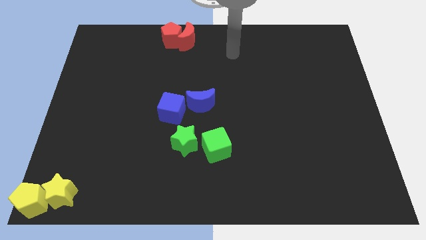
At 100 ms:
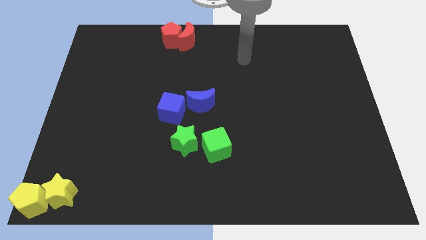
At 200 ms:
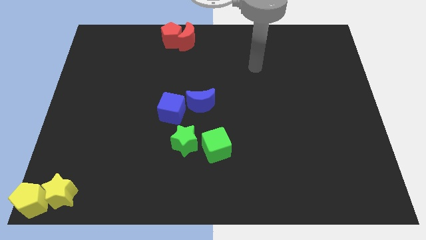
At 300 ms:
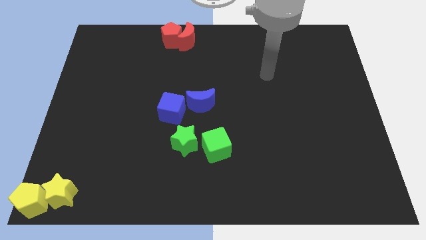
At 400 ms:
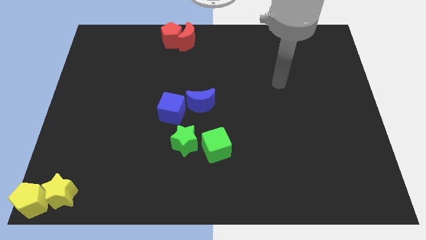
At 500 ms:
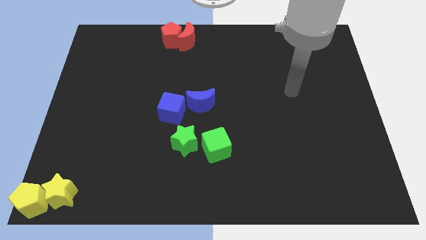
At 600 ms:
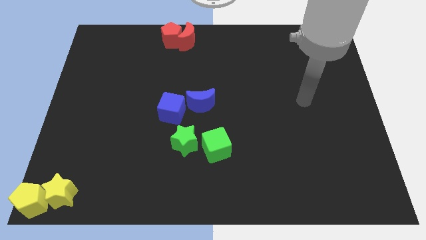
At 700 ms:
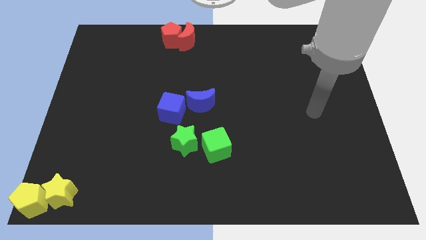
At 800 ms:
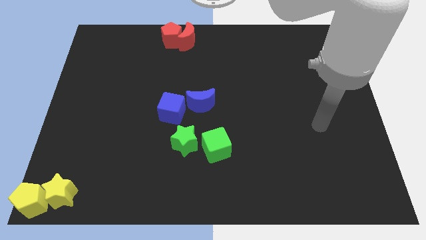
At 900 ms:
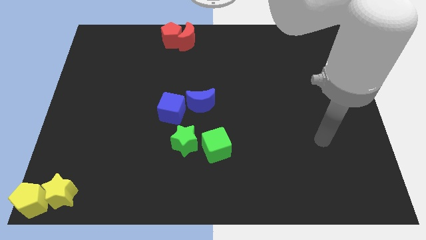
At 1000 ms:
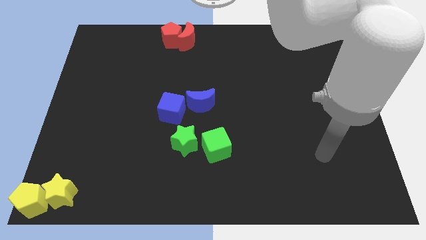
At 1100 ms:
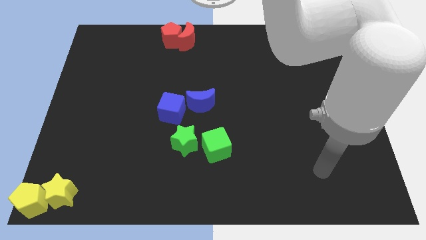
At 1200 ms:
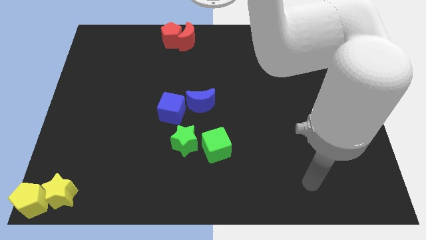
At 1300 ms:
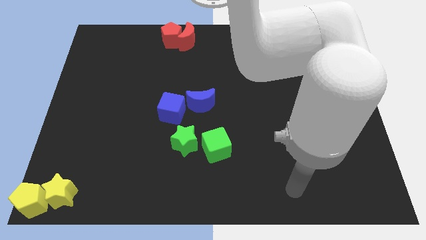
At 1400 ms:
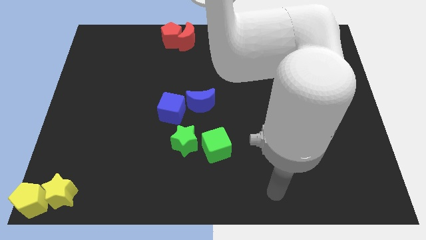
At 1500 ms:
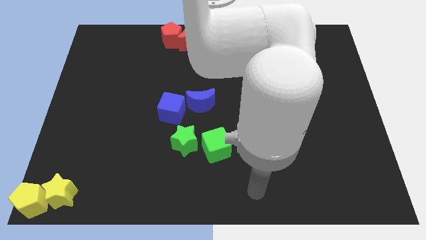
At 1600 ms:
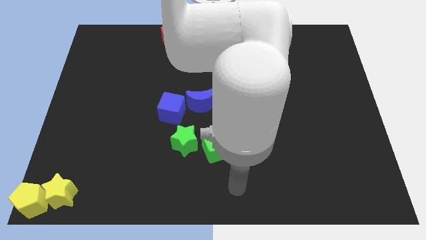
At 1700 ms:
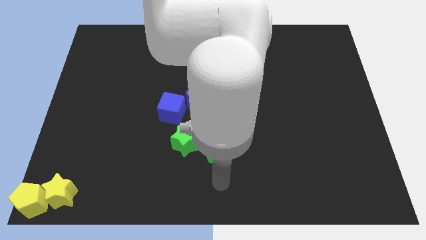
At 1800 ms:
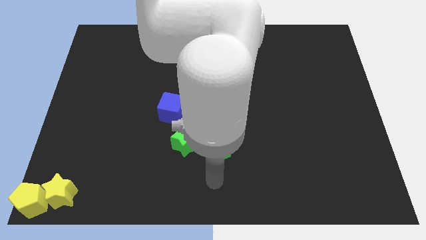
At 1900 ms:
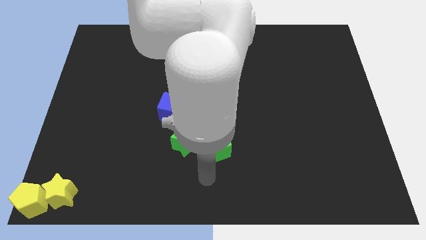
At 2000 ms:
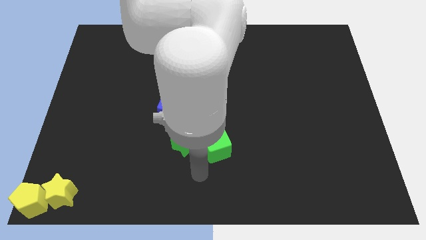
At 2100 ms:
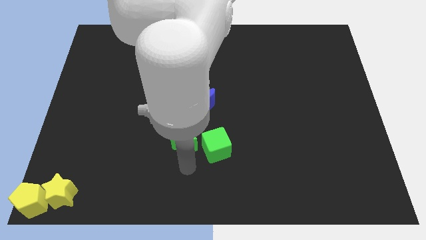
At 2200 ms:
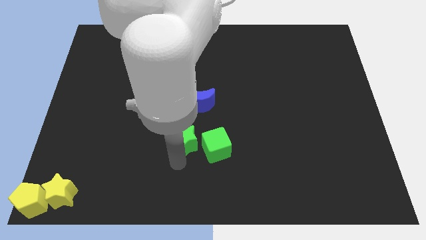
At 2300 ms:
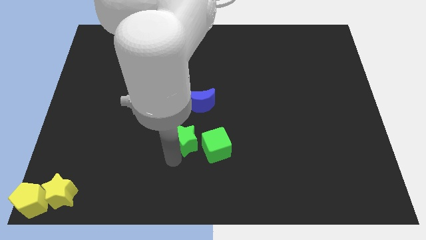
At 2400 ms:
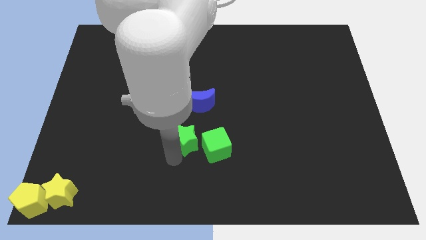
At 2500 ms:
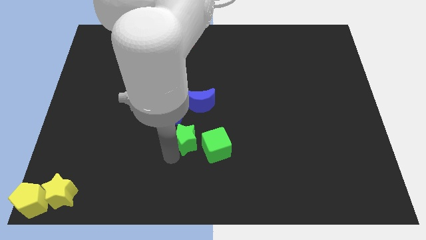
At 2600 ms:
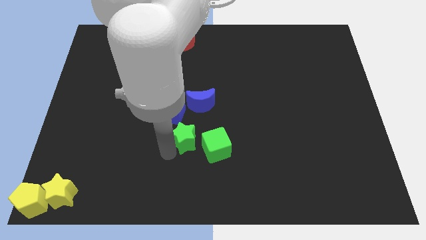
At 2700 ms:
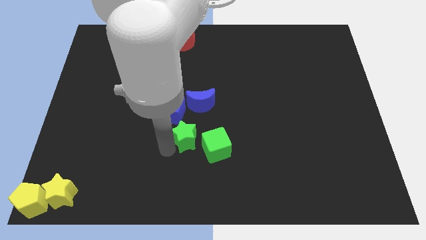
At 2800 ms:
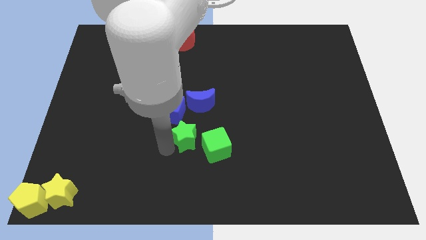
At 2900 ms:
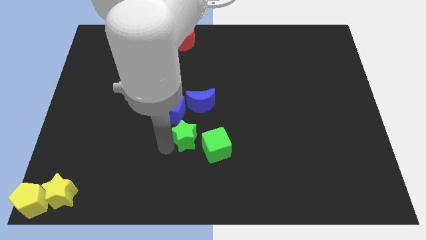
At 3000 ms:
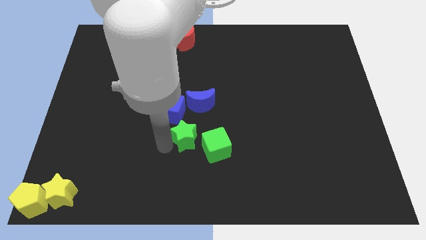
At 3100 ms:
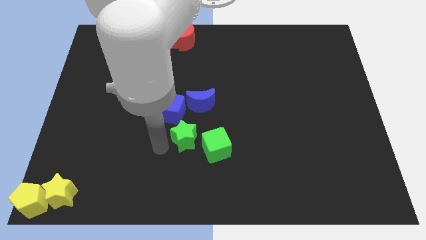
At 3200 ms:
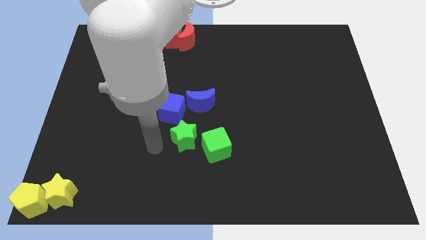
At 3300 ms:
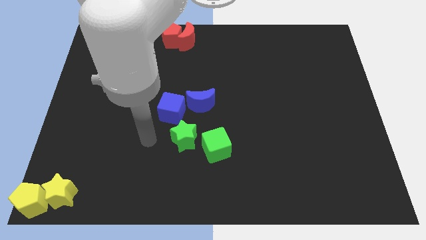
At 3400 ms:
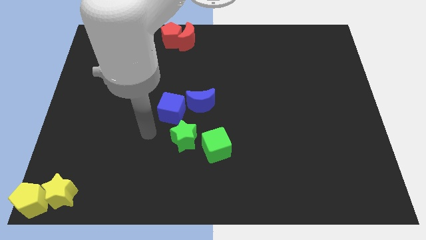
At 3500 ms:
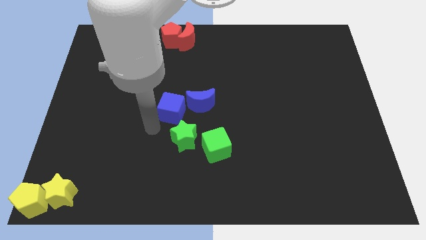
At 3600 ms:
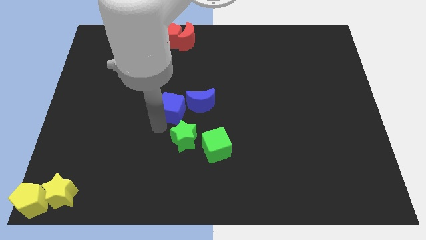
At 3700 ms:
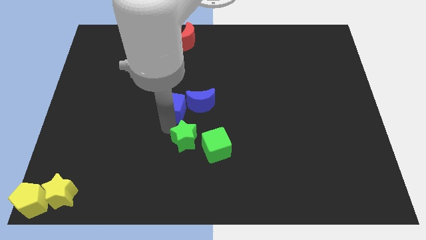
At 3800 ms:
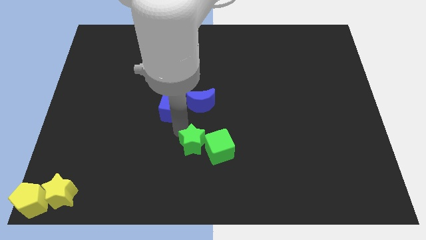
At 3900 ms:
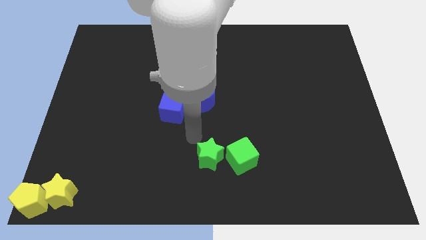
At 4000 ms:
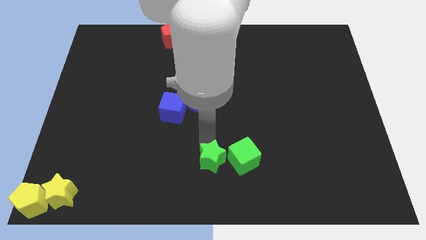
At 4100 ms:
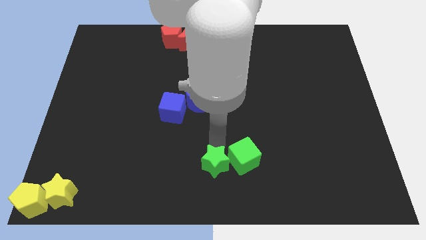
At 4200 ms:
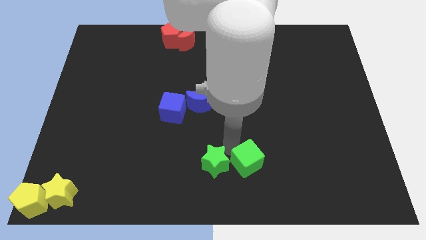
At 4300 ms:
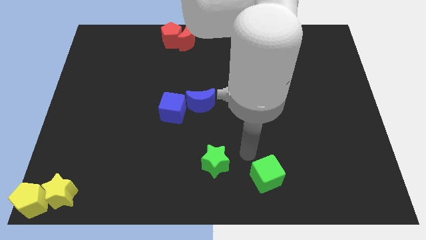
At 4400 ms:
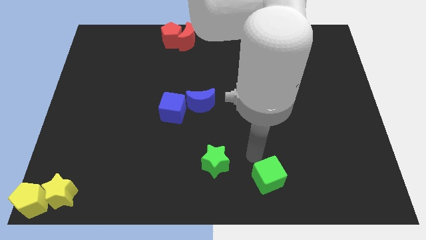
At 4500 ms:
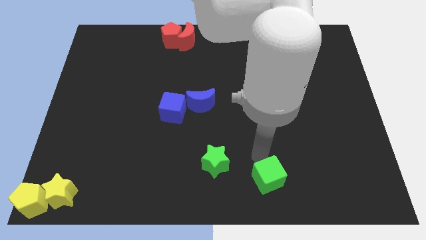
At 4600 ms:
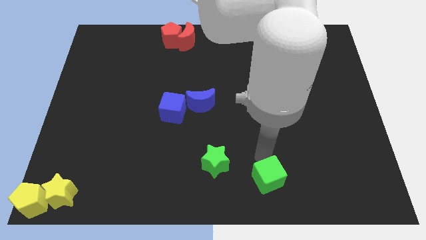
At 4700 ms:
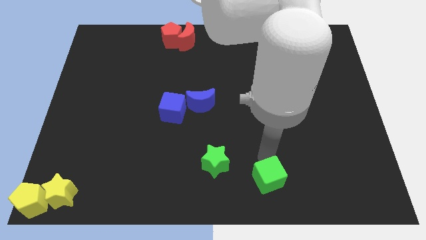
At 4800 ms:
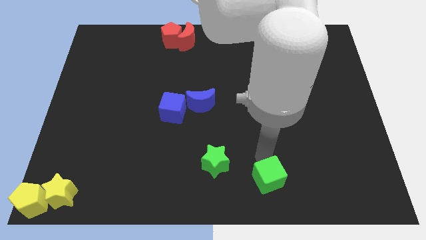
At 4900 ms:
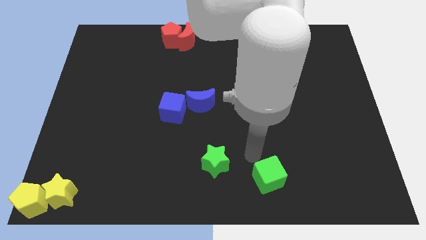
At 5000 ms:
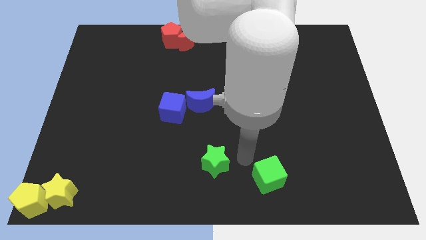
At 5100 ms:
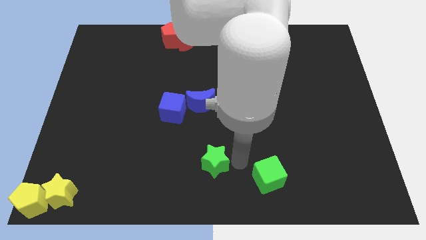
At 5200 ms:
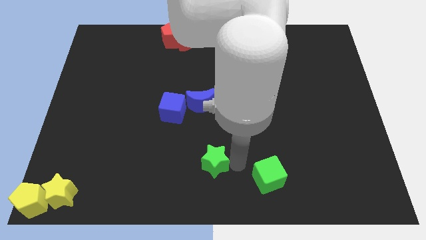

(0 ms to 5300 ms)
push the green star slightly towards the bottom center

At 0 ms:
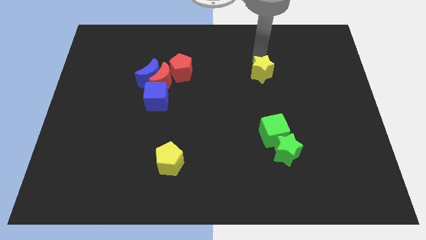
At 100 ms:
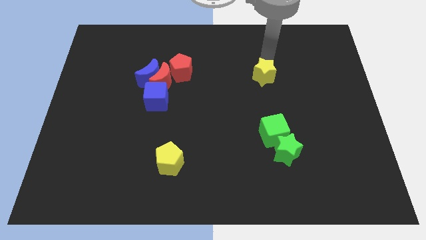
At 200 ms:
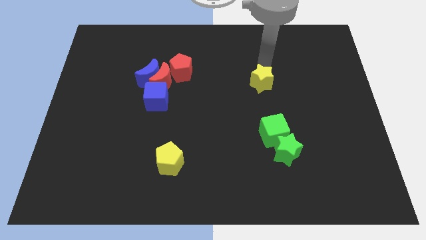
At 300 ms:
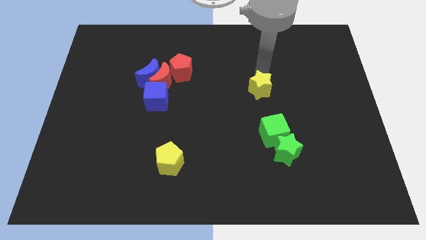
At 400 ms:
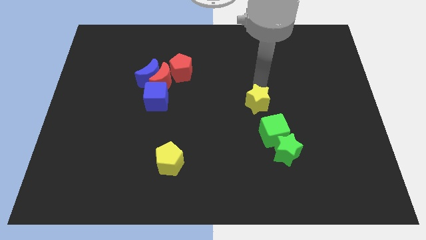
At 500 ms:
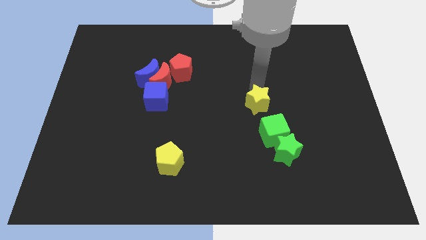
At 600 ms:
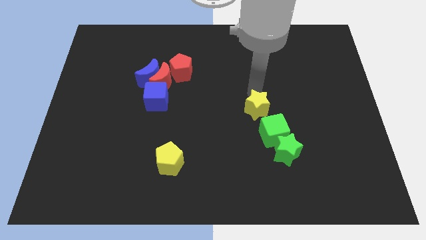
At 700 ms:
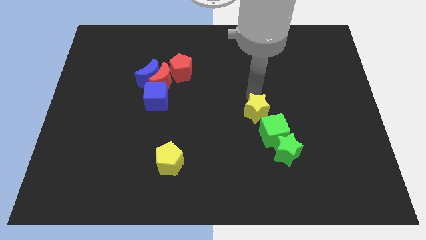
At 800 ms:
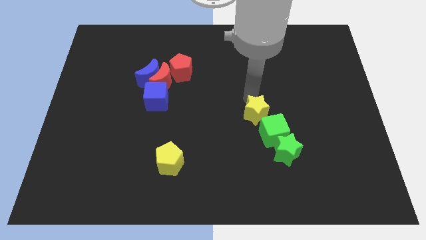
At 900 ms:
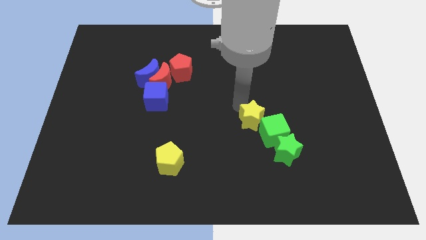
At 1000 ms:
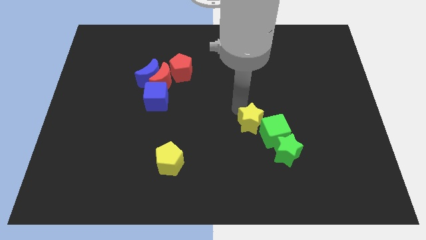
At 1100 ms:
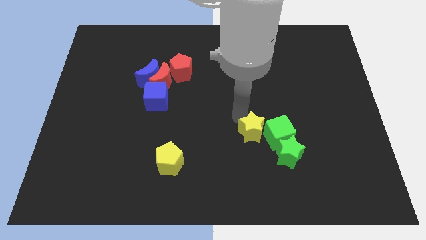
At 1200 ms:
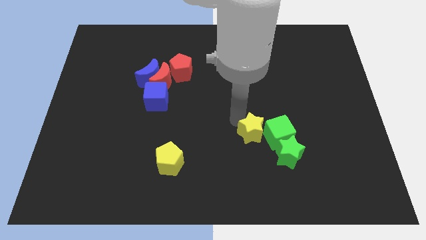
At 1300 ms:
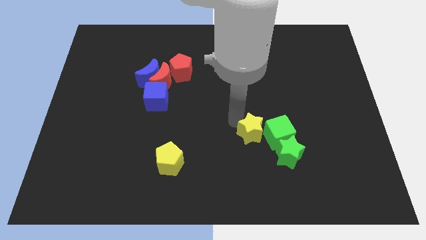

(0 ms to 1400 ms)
move yellow star into the green cube

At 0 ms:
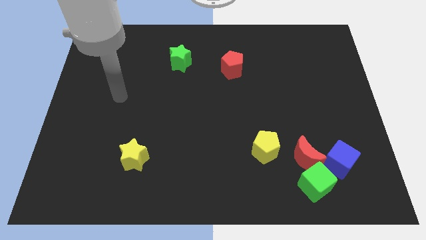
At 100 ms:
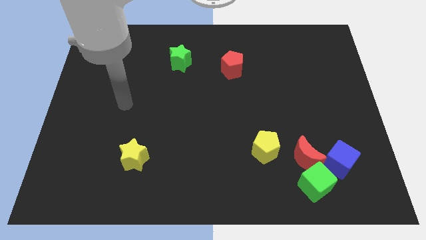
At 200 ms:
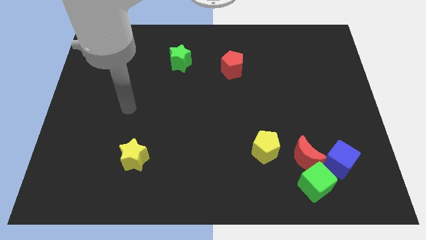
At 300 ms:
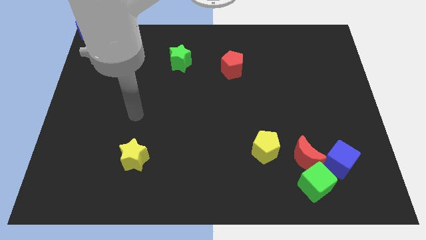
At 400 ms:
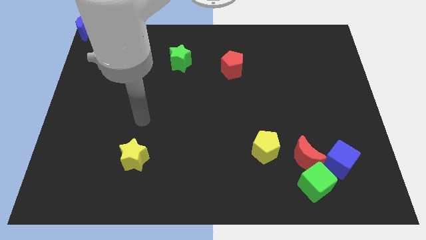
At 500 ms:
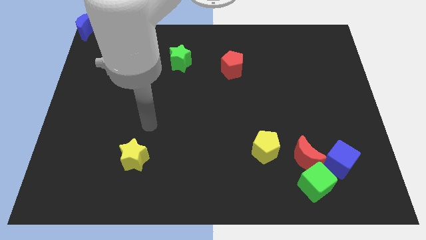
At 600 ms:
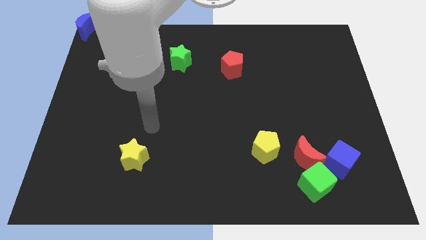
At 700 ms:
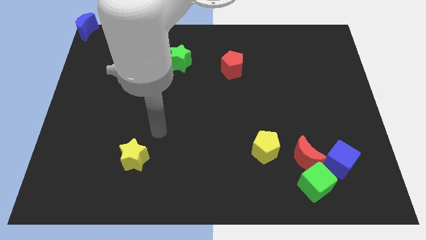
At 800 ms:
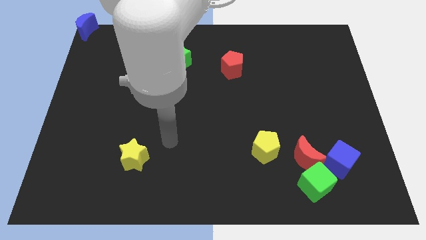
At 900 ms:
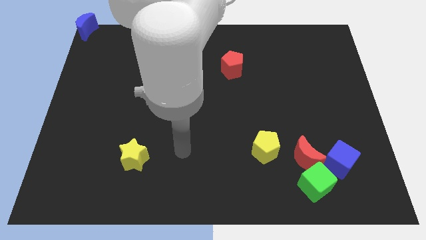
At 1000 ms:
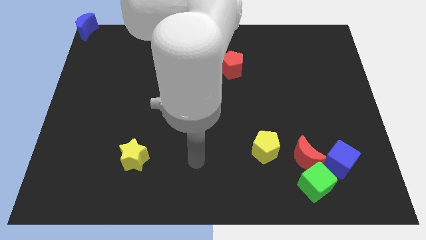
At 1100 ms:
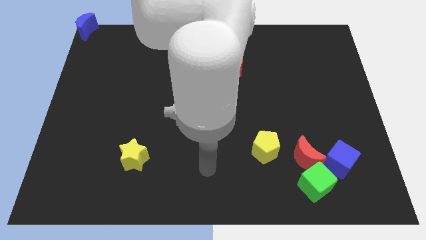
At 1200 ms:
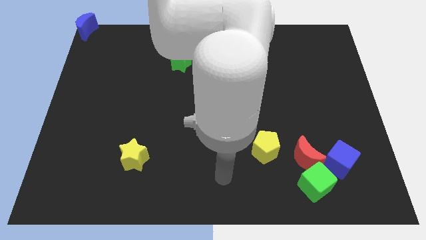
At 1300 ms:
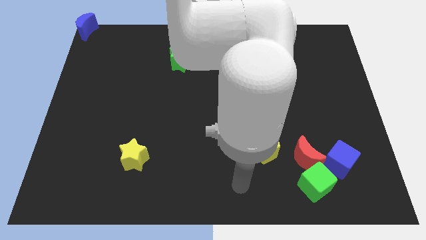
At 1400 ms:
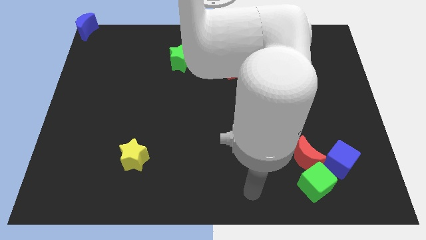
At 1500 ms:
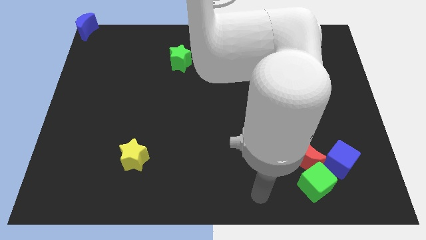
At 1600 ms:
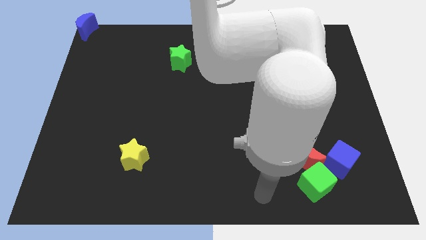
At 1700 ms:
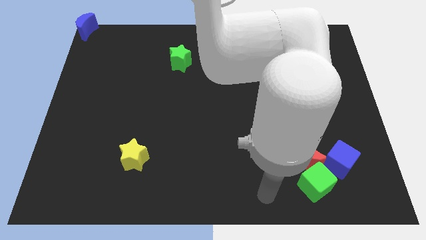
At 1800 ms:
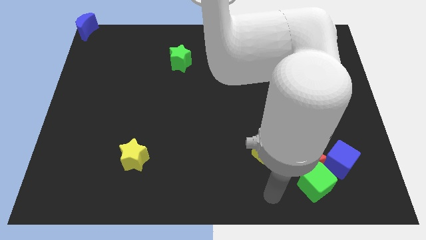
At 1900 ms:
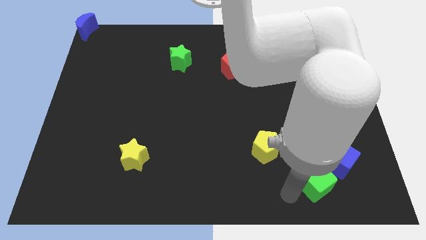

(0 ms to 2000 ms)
move your arm close to the green cube

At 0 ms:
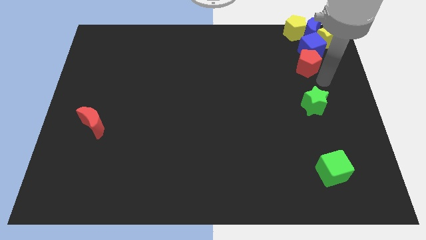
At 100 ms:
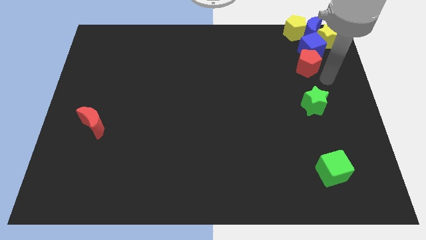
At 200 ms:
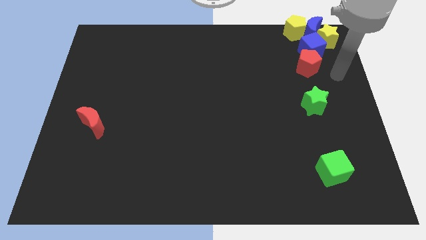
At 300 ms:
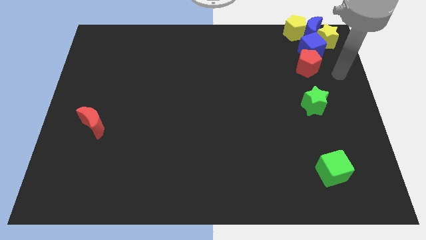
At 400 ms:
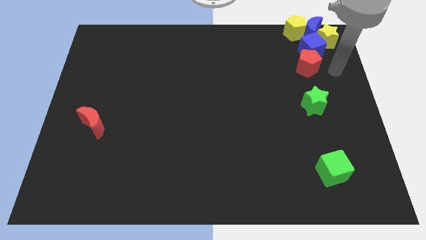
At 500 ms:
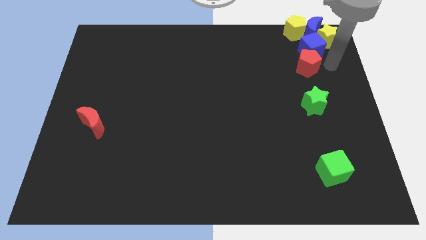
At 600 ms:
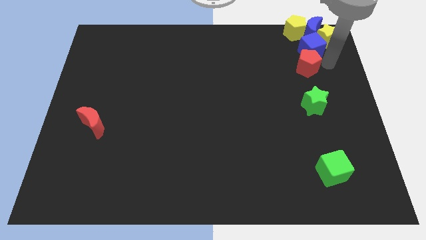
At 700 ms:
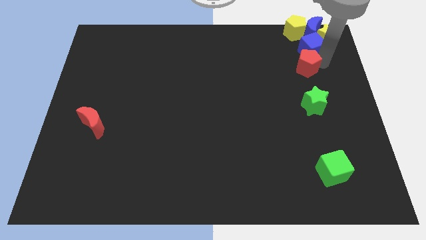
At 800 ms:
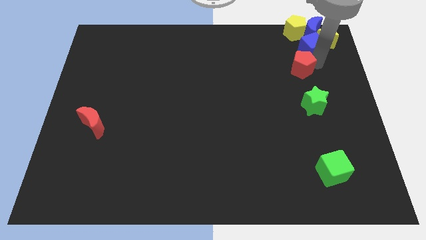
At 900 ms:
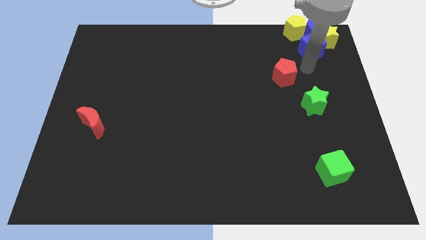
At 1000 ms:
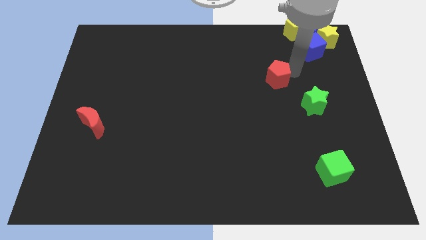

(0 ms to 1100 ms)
push the red pentagon to the top left of the green star
